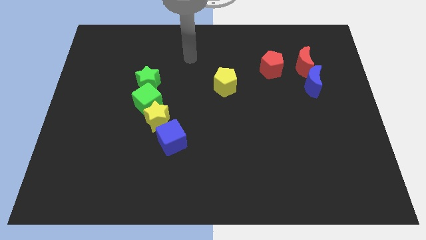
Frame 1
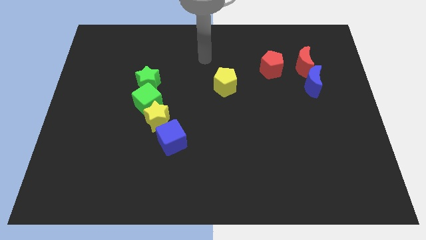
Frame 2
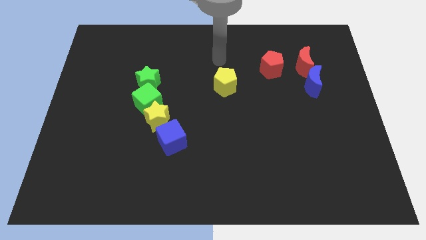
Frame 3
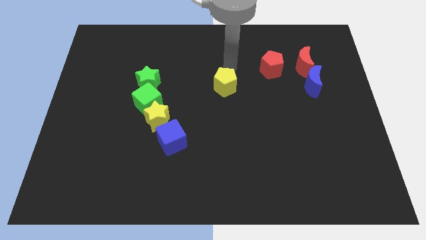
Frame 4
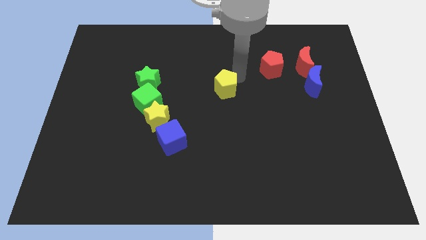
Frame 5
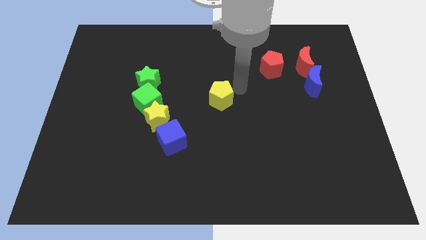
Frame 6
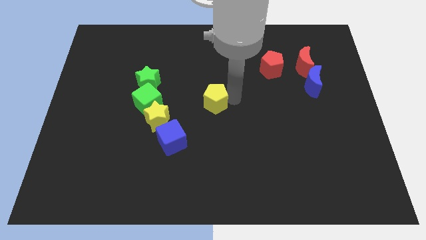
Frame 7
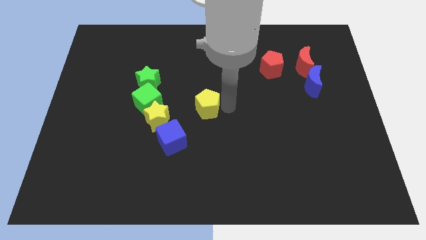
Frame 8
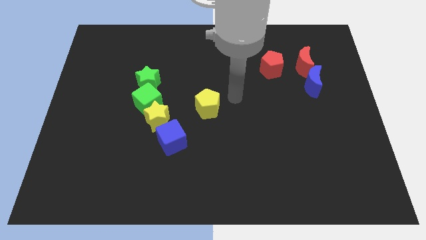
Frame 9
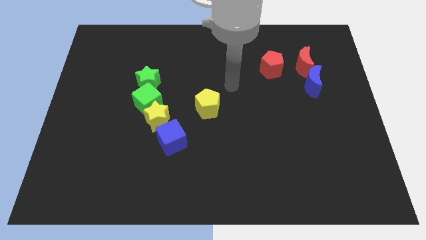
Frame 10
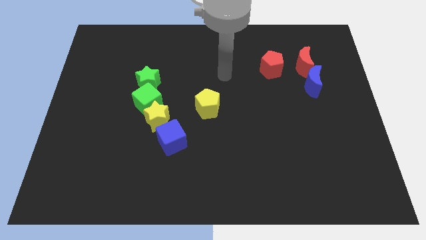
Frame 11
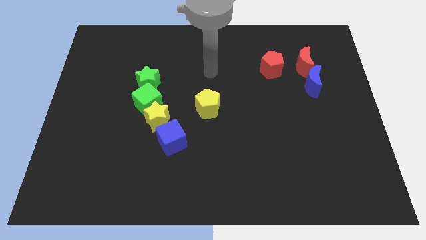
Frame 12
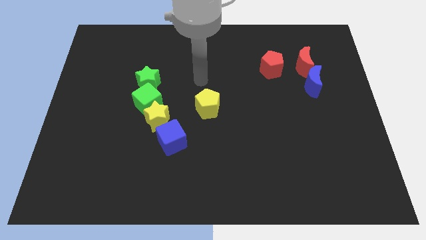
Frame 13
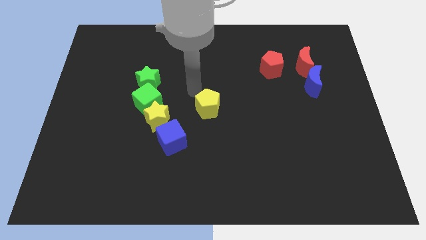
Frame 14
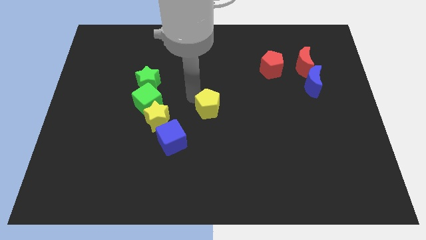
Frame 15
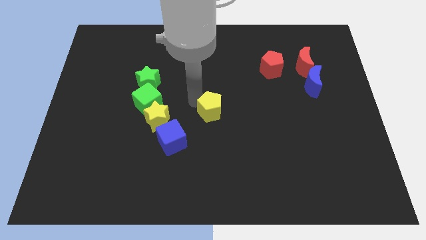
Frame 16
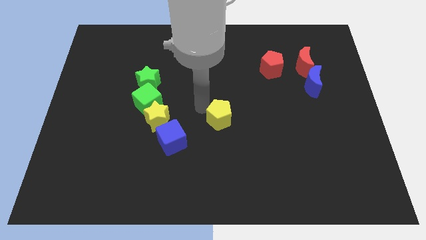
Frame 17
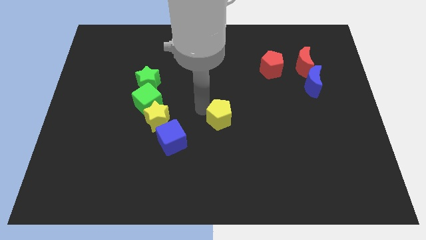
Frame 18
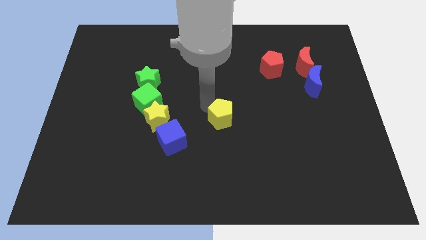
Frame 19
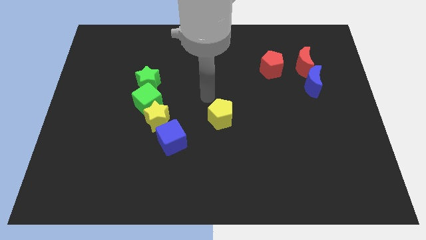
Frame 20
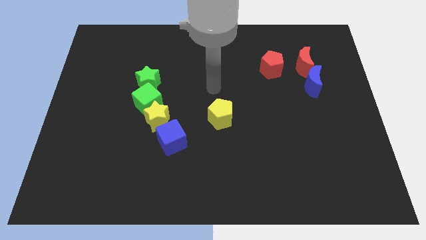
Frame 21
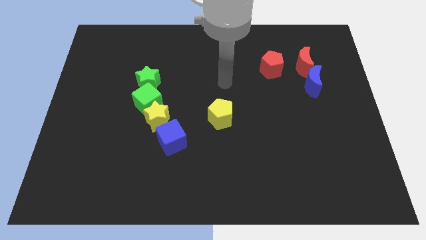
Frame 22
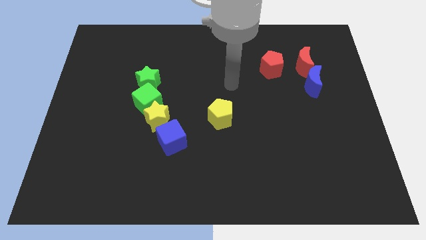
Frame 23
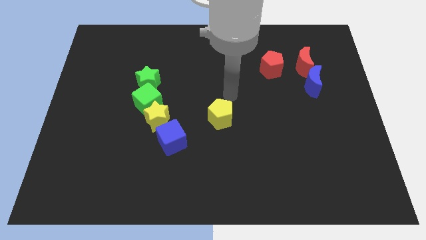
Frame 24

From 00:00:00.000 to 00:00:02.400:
place the yellow pentagon at the center of the board

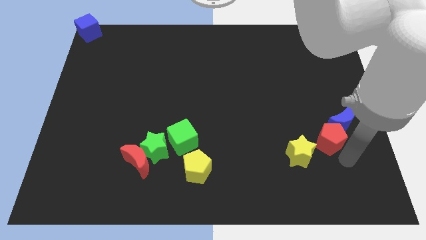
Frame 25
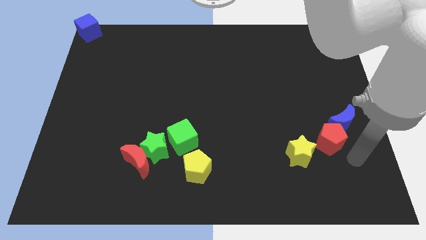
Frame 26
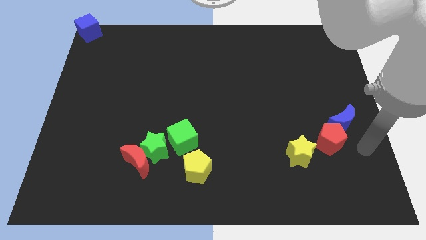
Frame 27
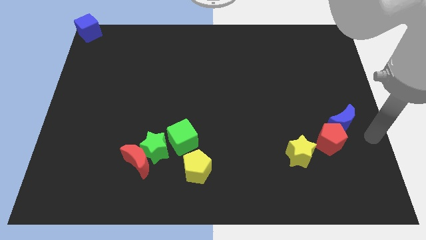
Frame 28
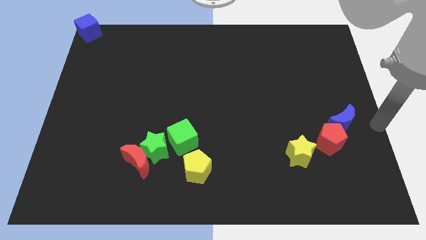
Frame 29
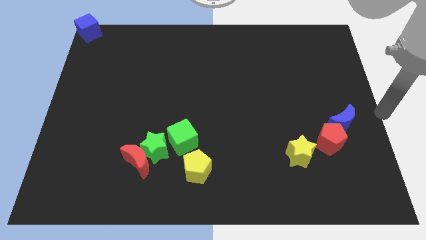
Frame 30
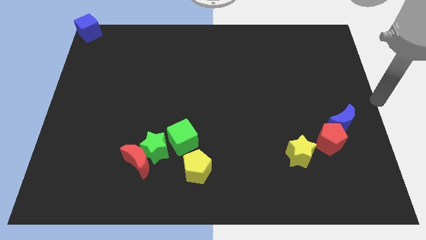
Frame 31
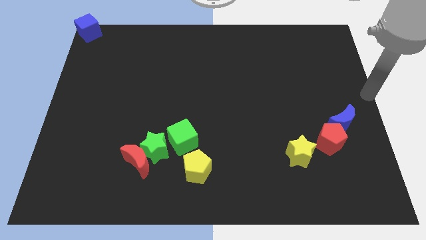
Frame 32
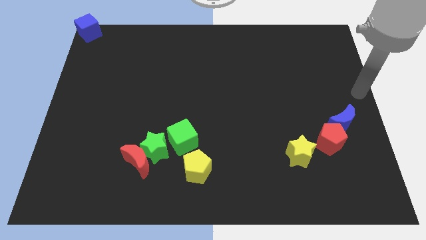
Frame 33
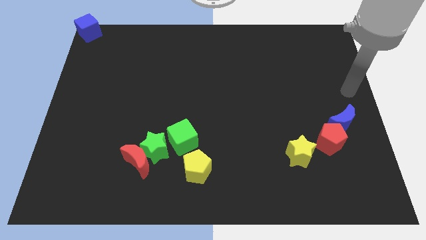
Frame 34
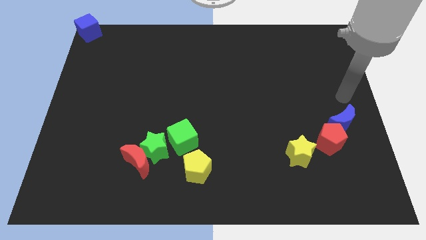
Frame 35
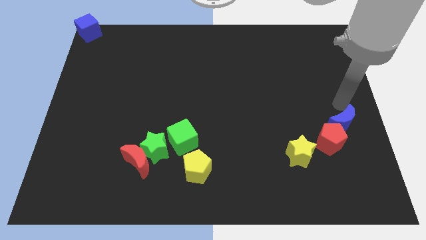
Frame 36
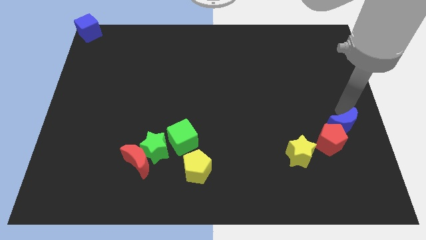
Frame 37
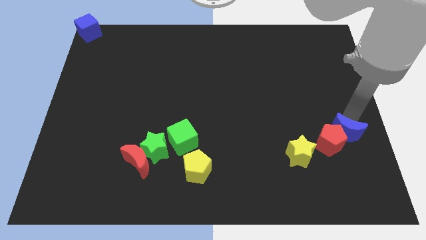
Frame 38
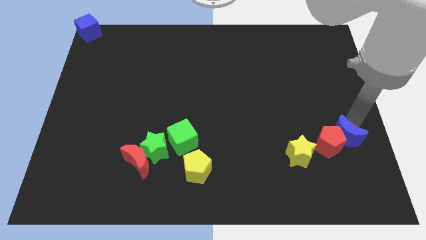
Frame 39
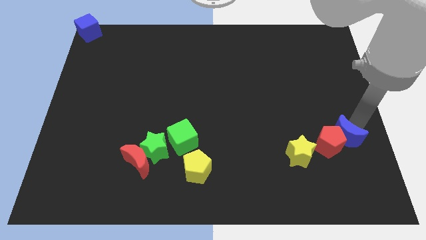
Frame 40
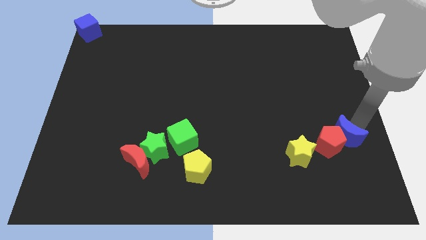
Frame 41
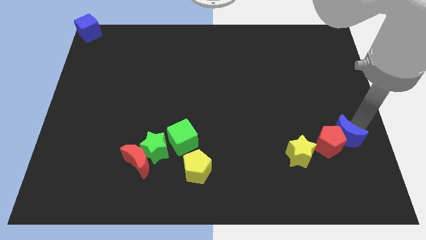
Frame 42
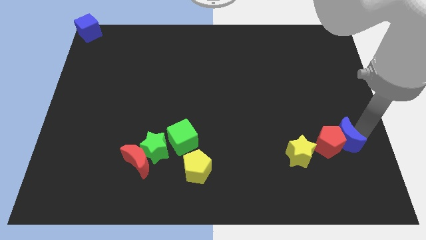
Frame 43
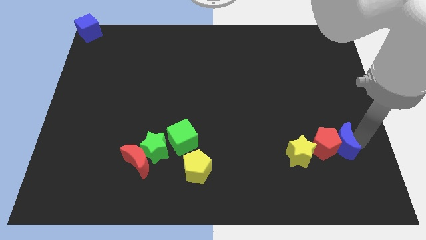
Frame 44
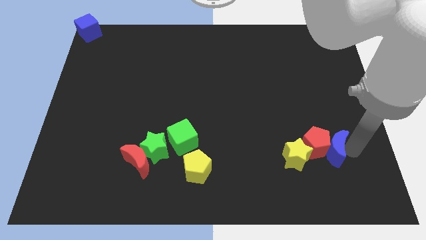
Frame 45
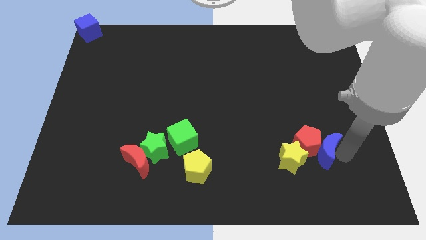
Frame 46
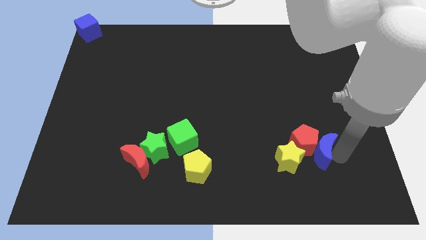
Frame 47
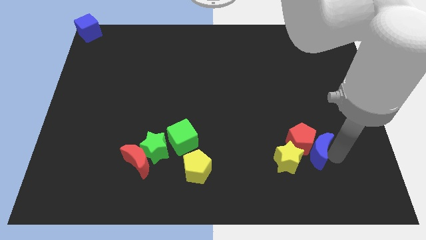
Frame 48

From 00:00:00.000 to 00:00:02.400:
push the blue moon into the red pentagon and yellow star

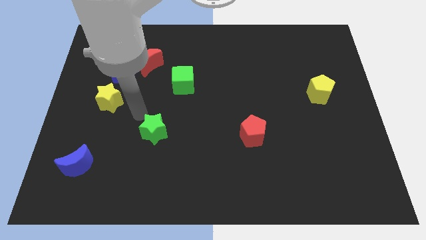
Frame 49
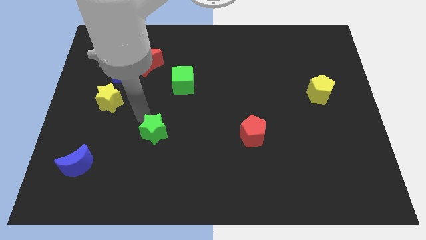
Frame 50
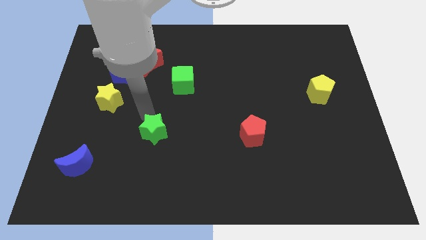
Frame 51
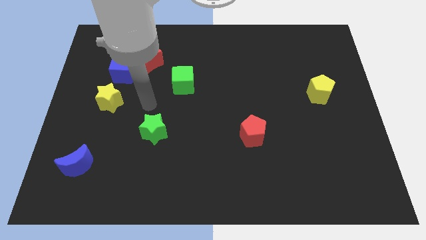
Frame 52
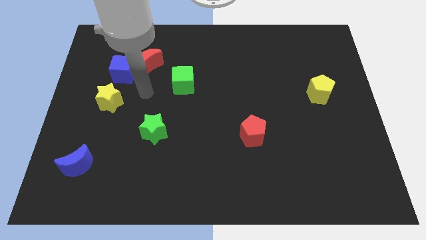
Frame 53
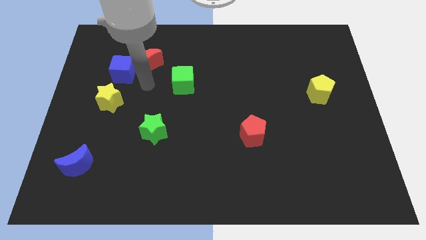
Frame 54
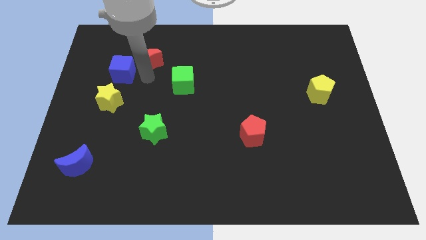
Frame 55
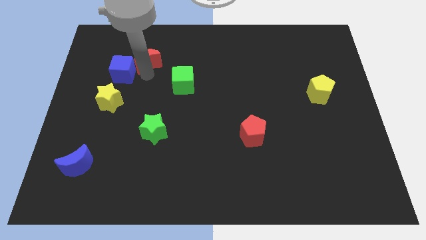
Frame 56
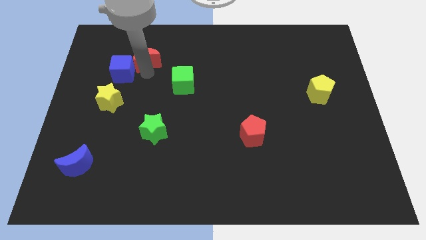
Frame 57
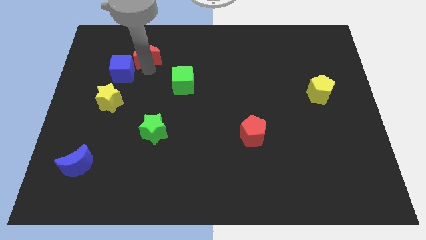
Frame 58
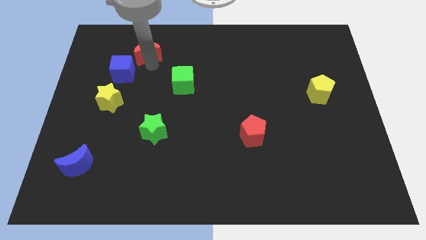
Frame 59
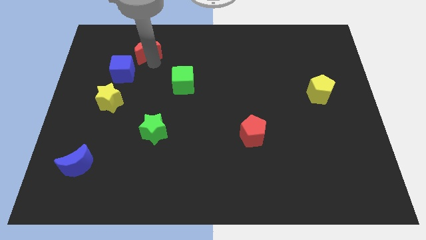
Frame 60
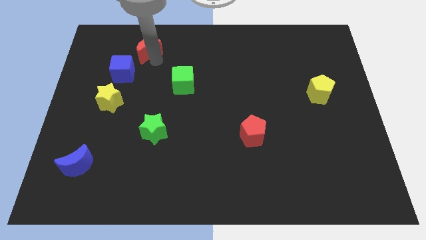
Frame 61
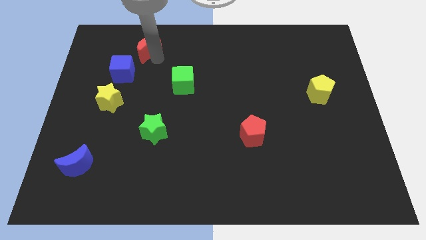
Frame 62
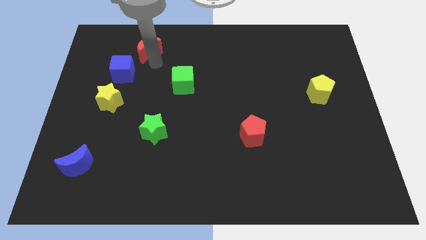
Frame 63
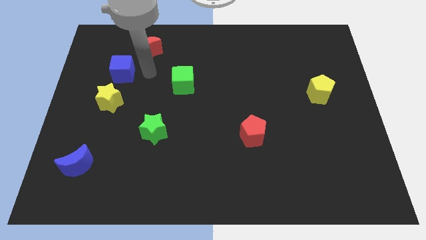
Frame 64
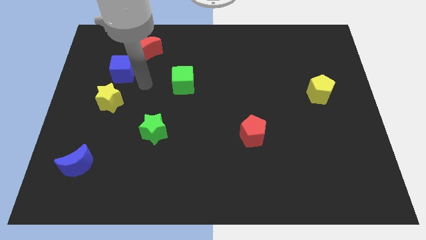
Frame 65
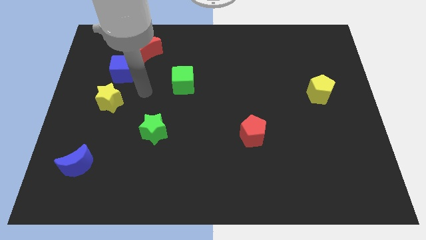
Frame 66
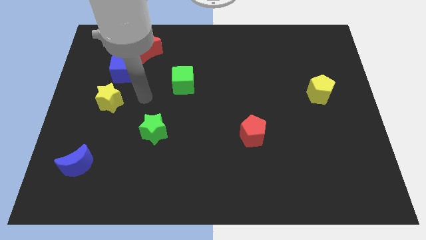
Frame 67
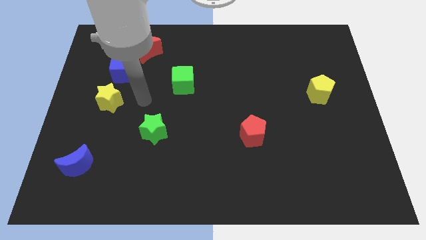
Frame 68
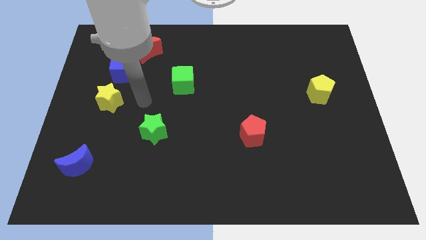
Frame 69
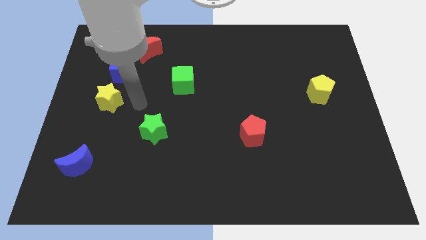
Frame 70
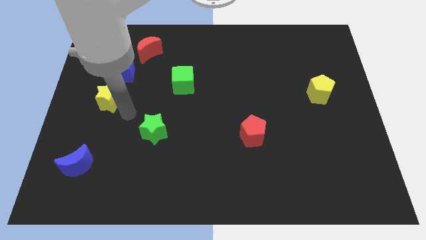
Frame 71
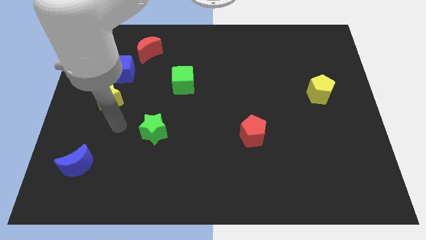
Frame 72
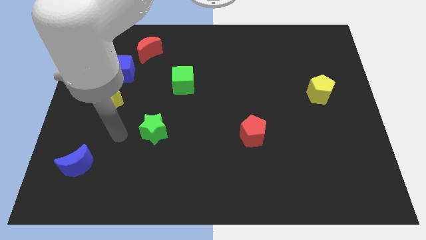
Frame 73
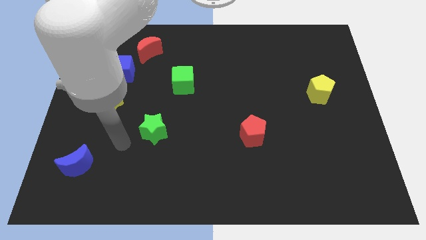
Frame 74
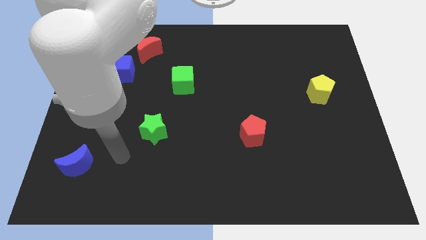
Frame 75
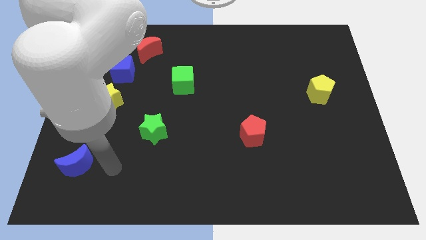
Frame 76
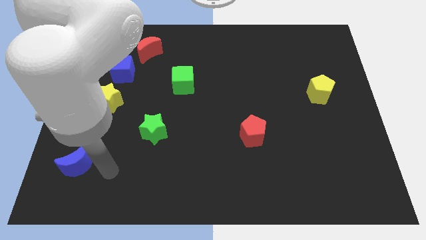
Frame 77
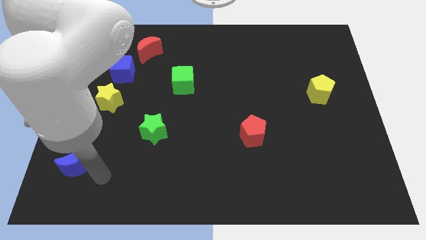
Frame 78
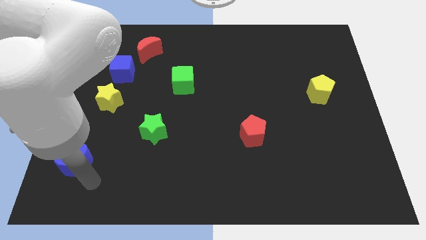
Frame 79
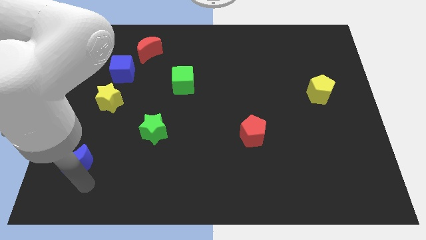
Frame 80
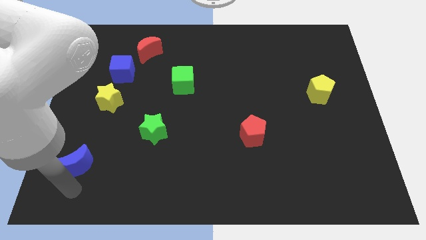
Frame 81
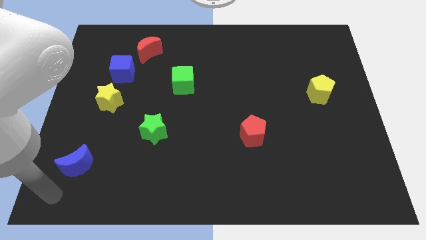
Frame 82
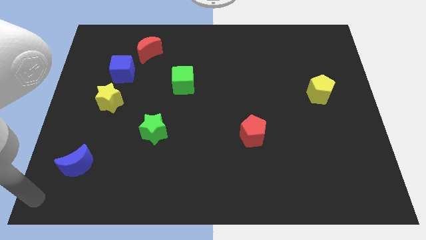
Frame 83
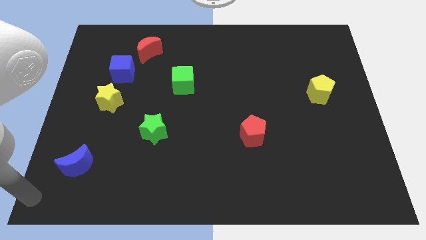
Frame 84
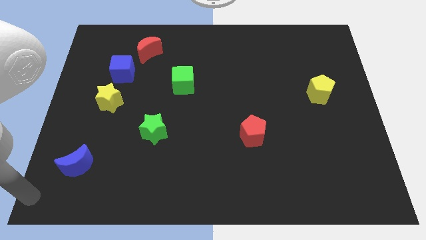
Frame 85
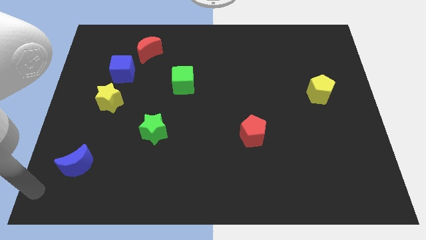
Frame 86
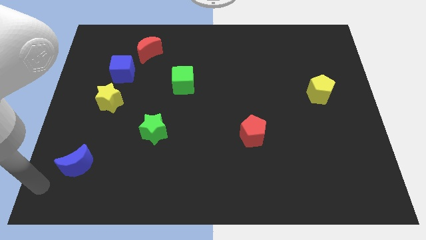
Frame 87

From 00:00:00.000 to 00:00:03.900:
put your arm on the bottom left corner of the board
